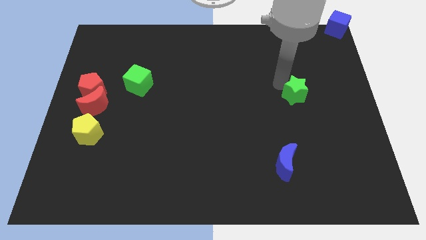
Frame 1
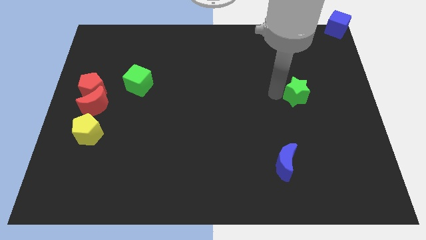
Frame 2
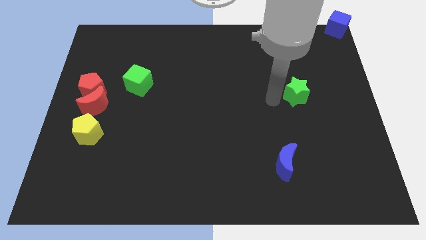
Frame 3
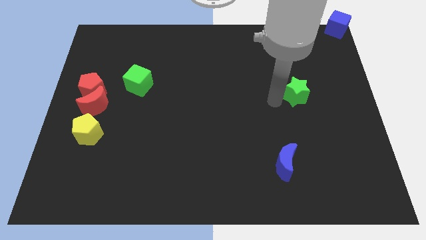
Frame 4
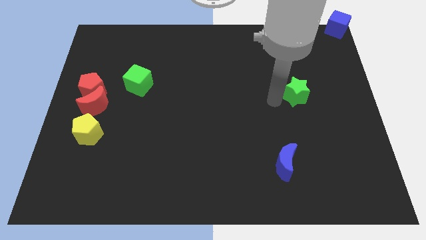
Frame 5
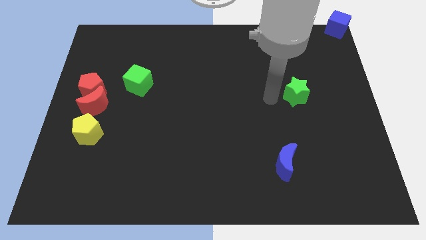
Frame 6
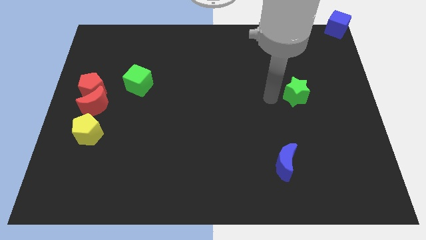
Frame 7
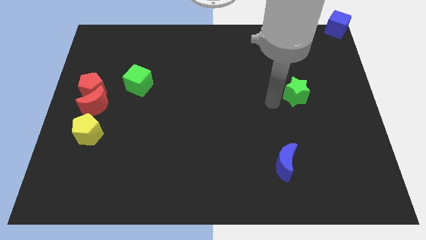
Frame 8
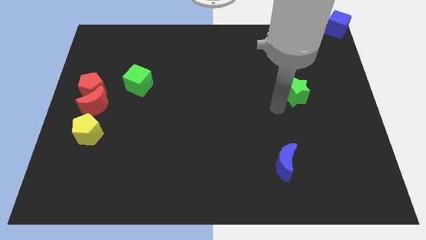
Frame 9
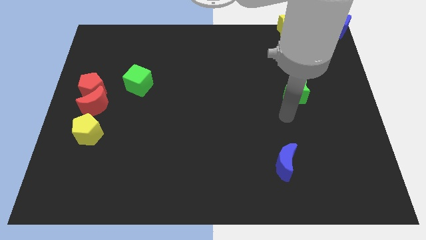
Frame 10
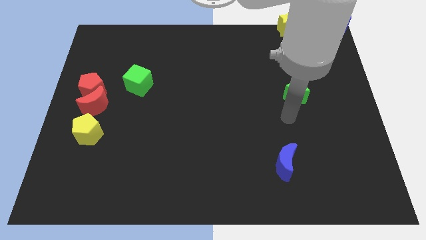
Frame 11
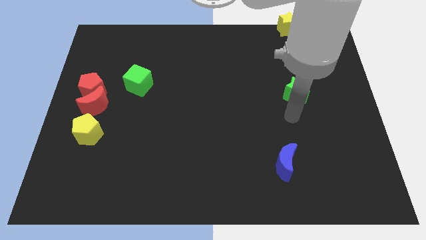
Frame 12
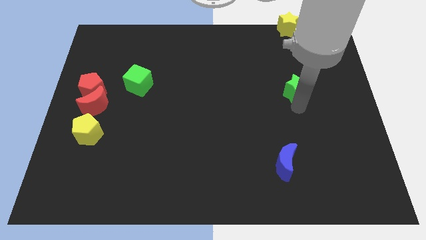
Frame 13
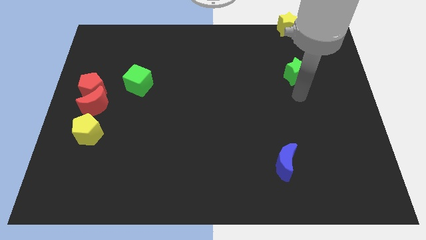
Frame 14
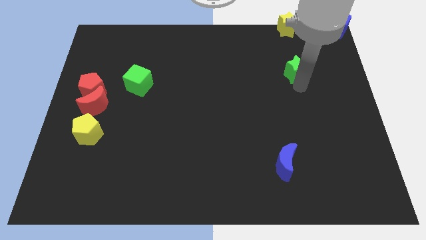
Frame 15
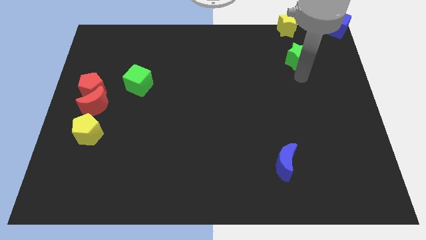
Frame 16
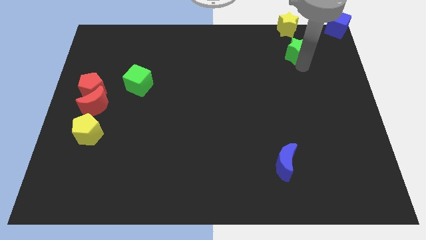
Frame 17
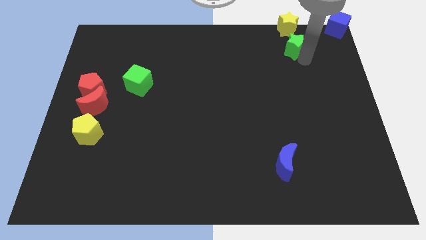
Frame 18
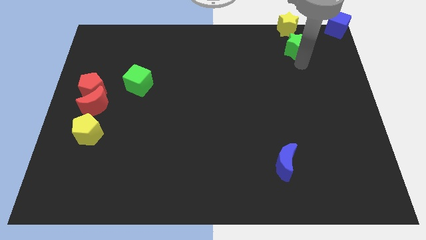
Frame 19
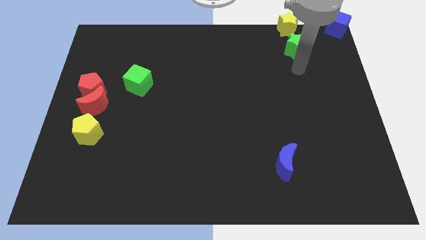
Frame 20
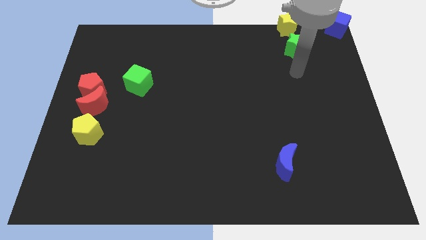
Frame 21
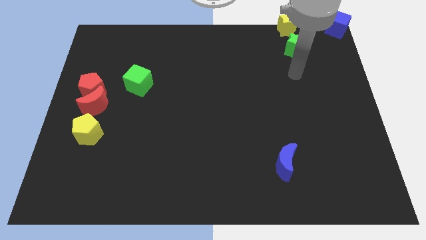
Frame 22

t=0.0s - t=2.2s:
push the green star towards the yellow star

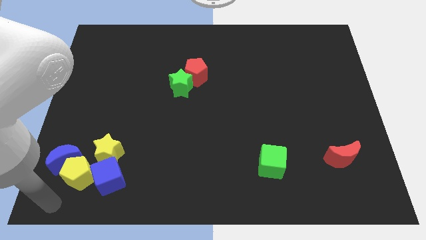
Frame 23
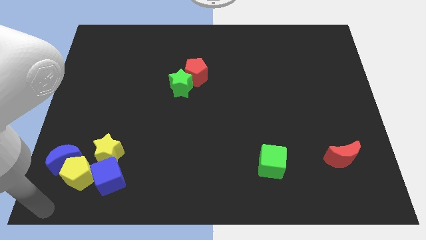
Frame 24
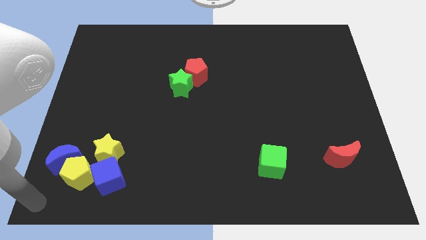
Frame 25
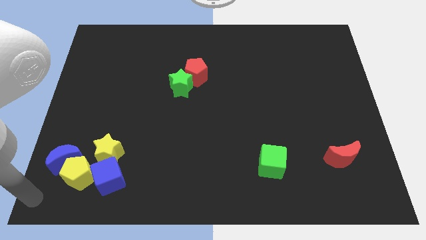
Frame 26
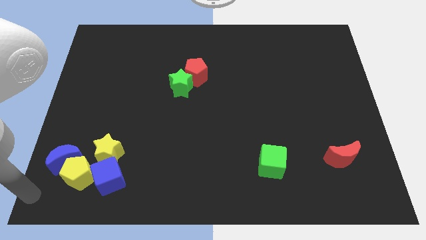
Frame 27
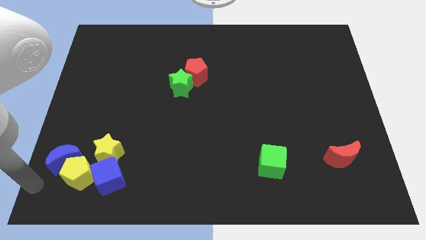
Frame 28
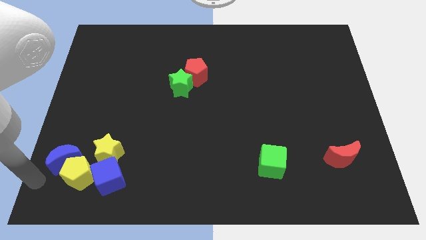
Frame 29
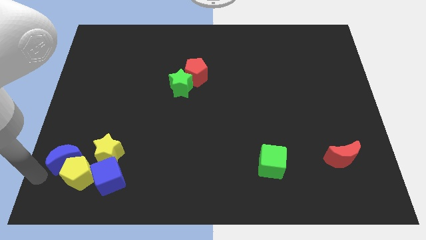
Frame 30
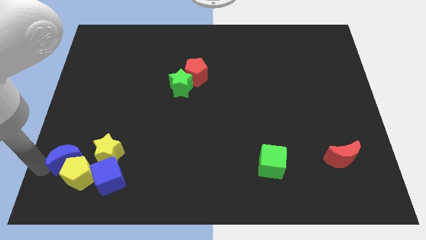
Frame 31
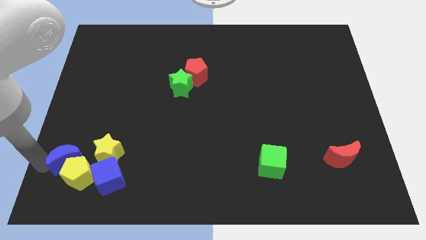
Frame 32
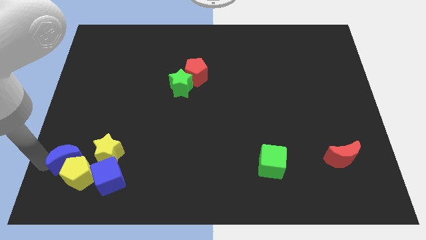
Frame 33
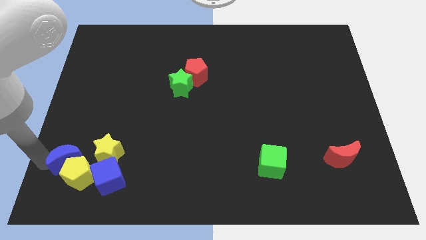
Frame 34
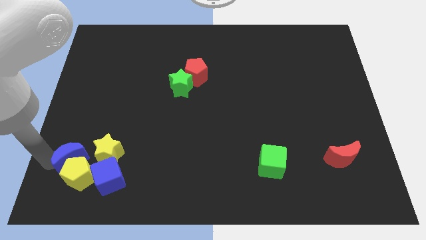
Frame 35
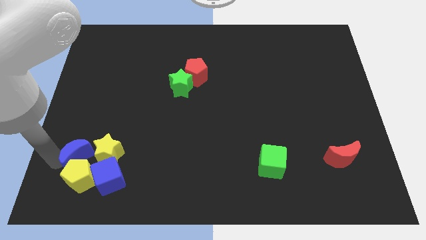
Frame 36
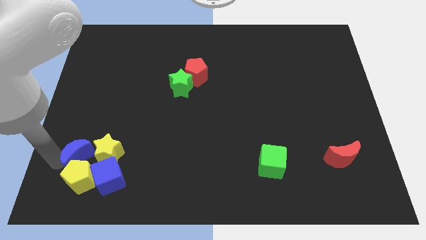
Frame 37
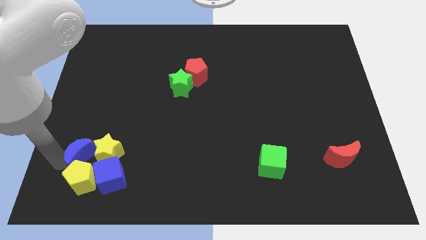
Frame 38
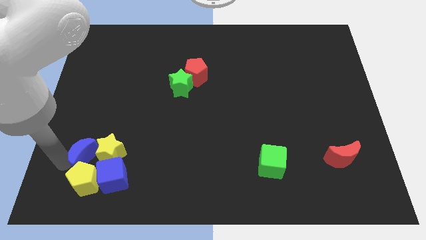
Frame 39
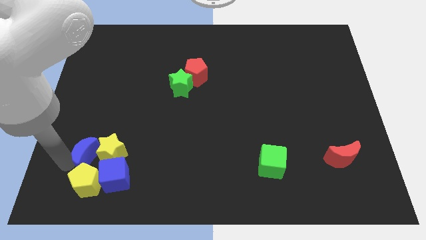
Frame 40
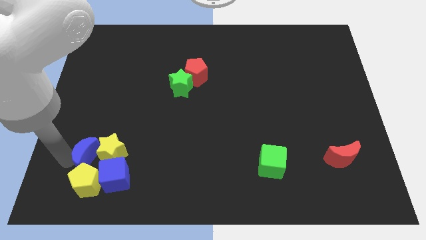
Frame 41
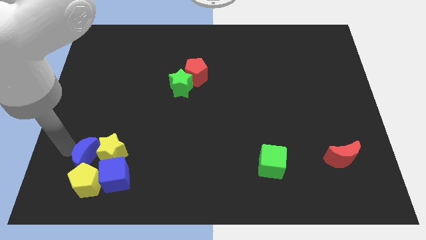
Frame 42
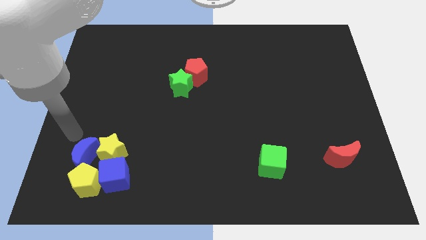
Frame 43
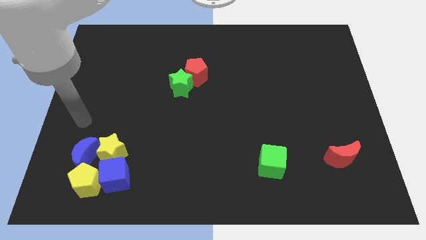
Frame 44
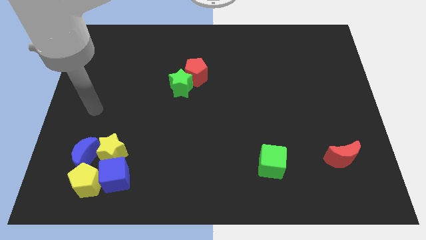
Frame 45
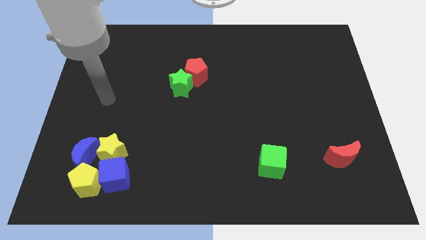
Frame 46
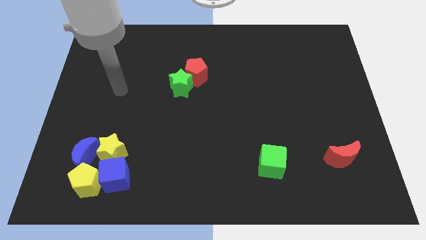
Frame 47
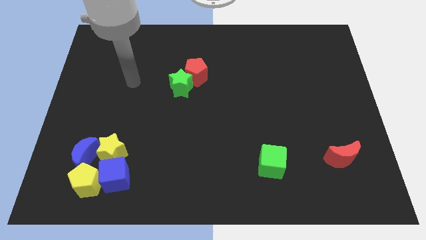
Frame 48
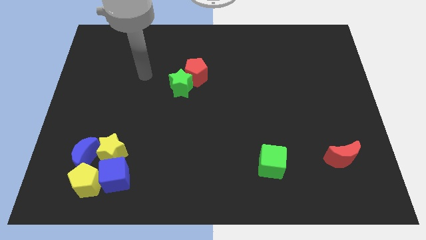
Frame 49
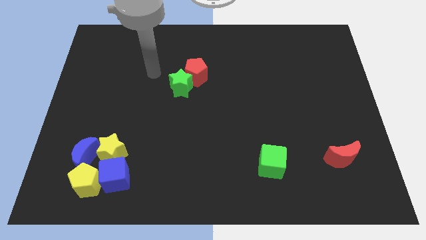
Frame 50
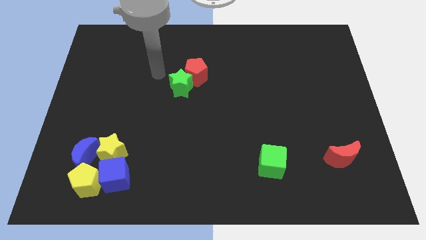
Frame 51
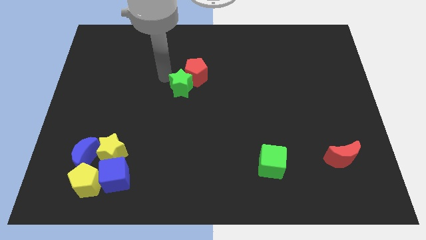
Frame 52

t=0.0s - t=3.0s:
push the blue crescent to the left of the yellow star

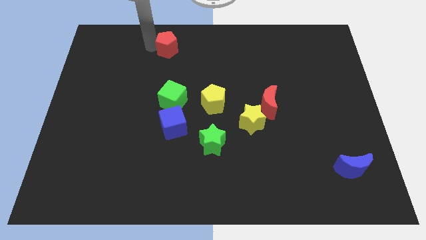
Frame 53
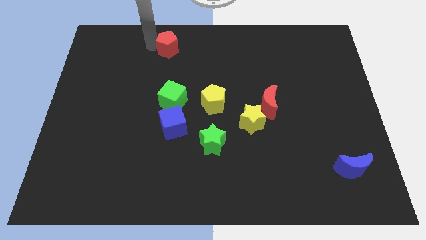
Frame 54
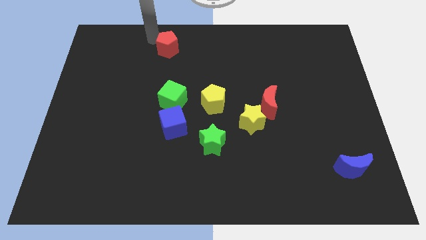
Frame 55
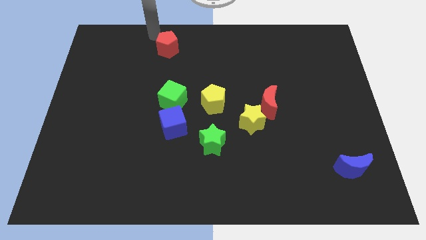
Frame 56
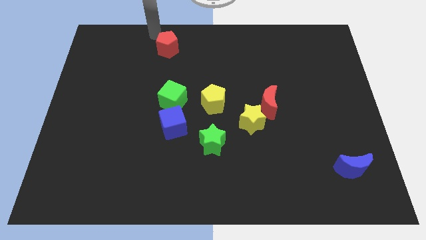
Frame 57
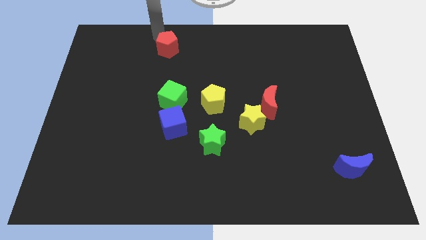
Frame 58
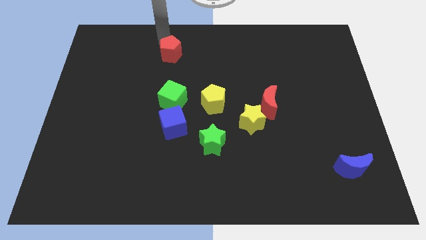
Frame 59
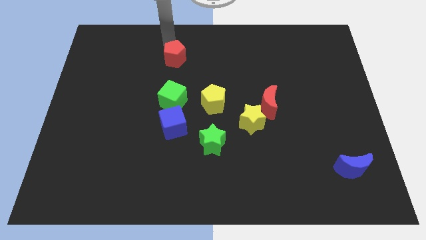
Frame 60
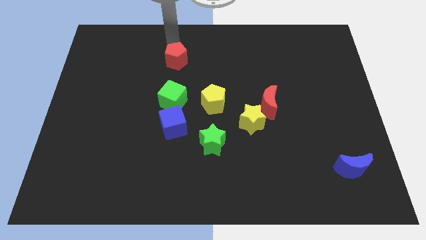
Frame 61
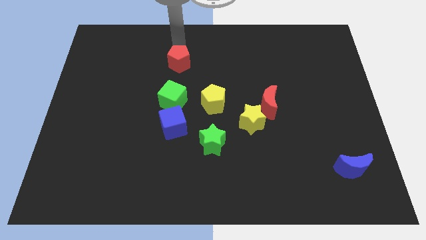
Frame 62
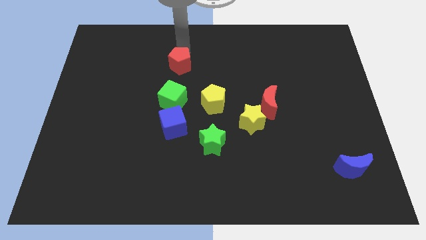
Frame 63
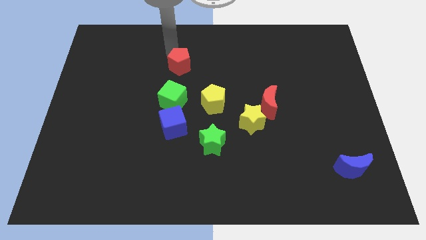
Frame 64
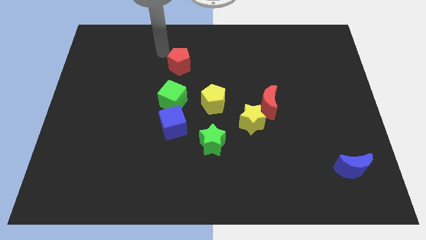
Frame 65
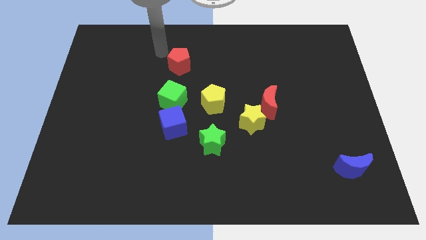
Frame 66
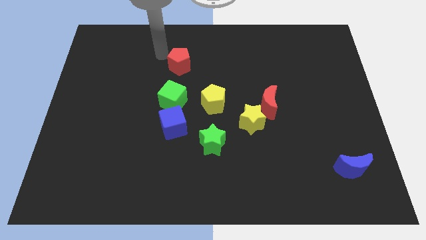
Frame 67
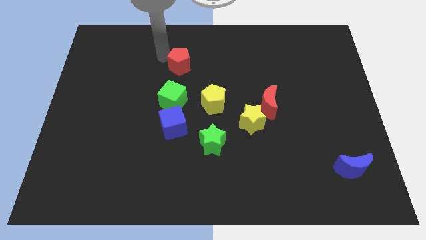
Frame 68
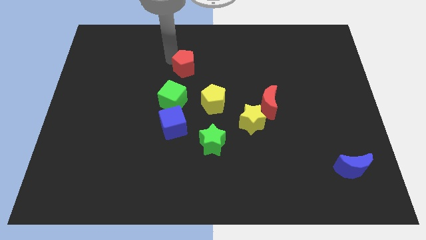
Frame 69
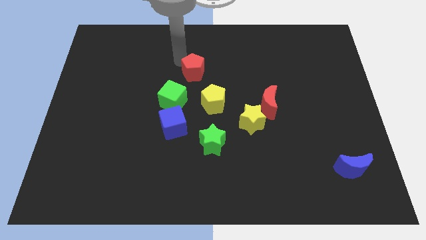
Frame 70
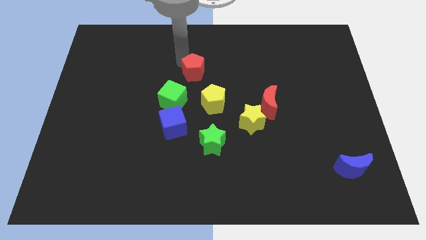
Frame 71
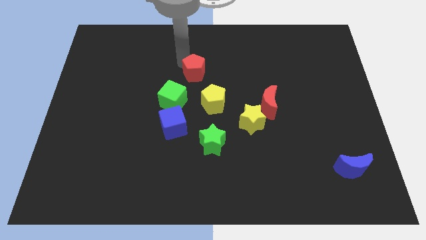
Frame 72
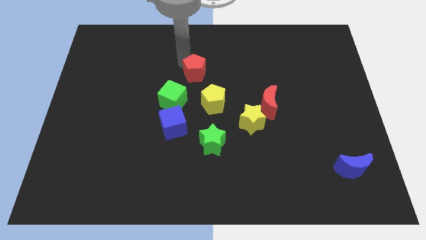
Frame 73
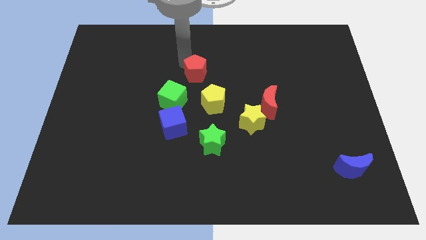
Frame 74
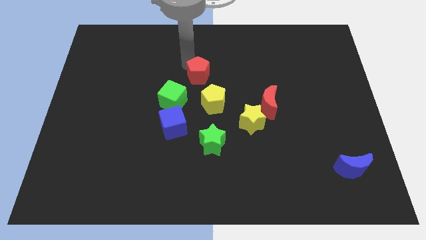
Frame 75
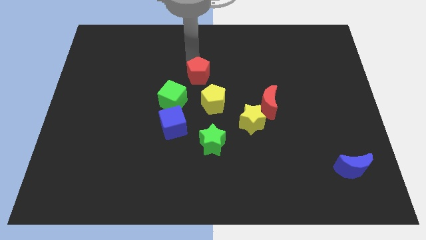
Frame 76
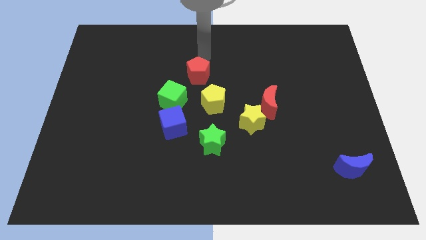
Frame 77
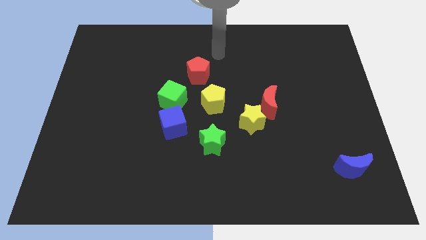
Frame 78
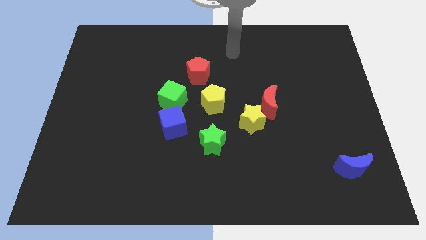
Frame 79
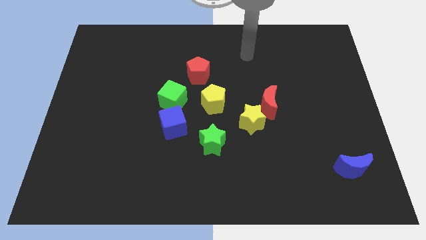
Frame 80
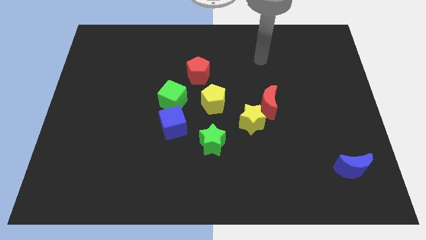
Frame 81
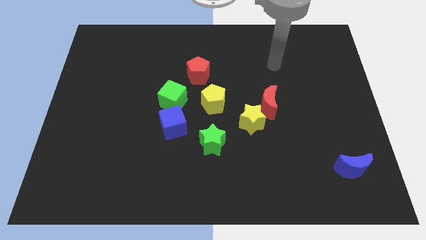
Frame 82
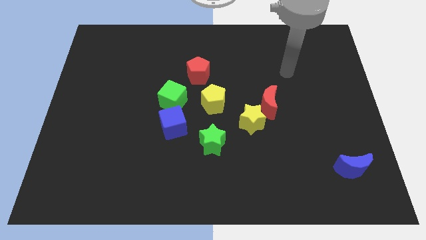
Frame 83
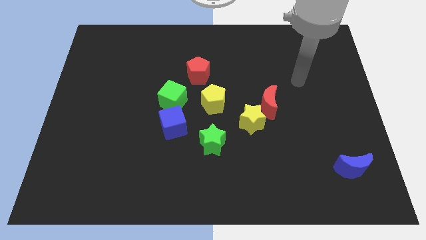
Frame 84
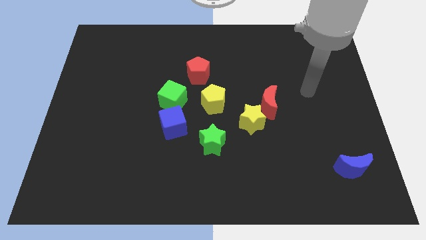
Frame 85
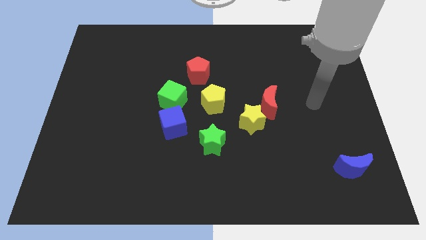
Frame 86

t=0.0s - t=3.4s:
push the red pentagon diagonal to the yellow pentagon

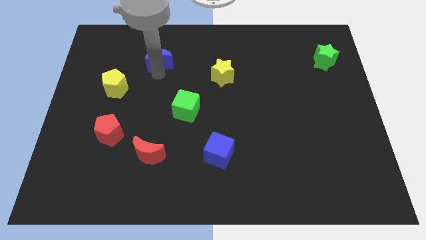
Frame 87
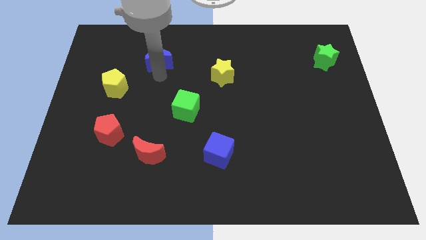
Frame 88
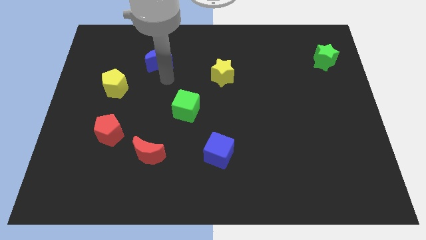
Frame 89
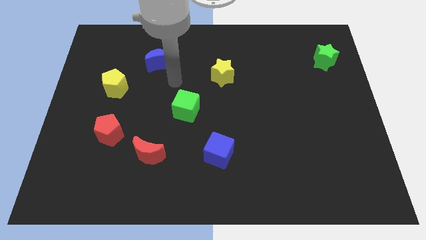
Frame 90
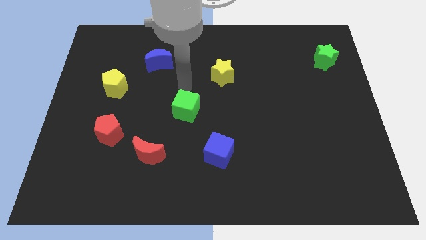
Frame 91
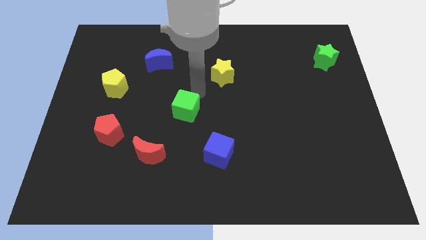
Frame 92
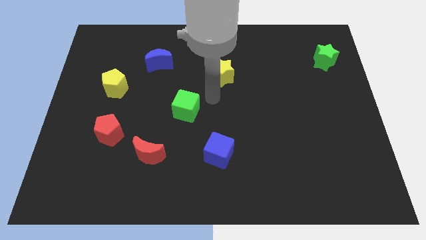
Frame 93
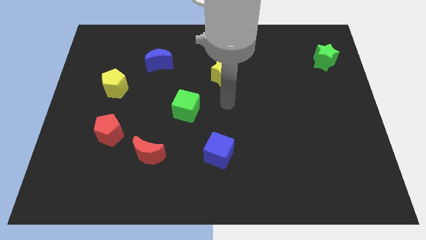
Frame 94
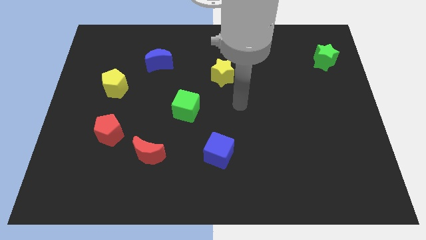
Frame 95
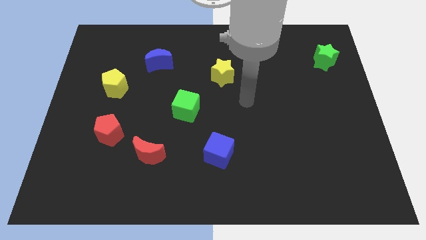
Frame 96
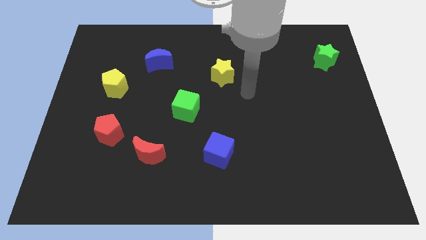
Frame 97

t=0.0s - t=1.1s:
move the arm away from the blue moon
